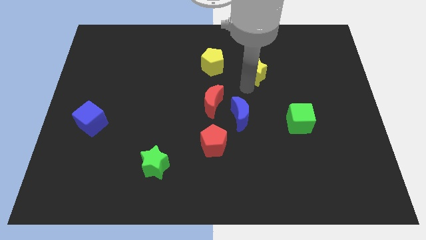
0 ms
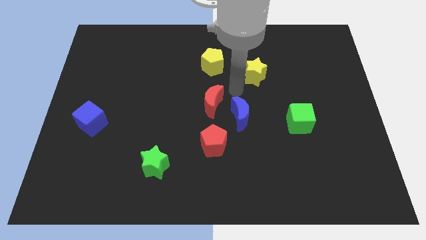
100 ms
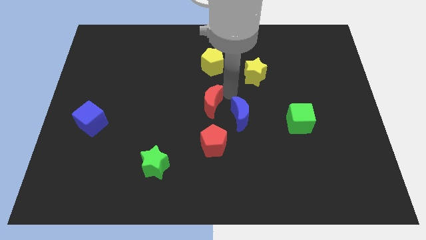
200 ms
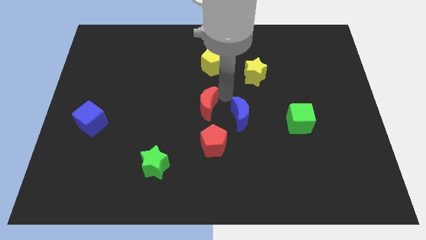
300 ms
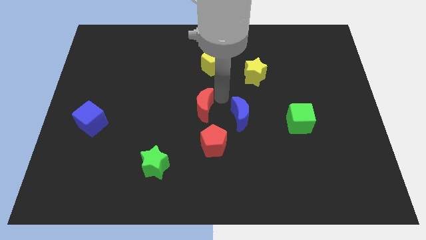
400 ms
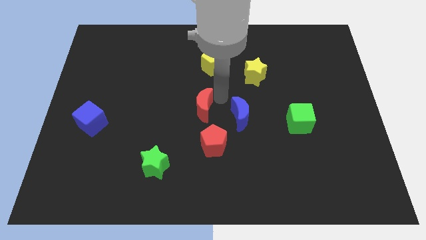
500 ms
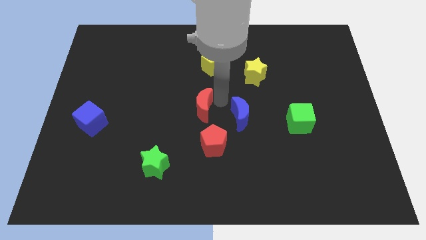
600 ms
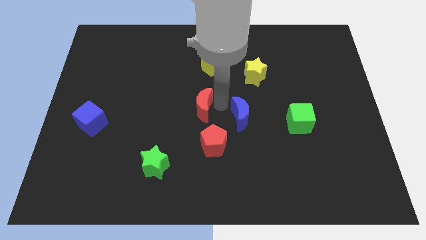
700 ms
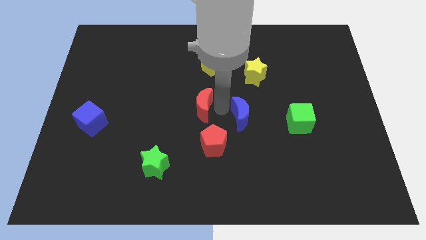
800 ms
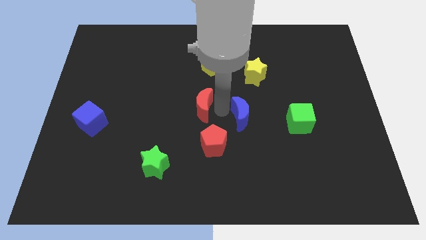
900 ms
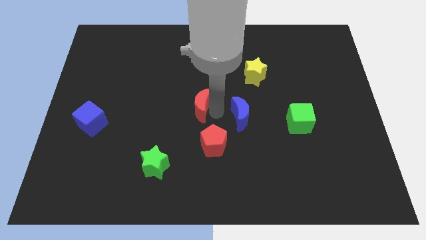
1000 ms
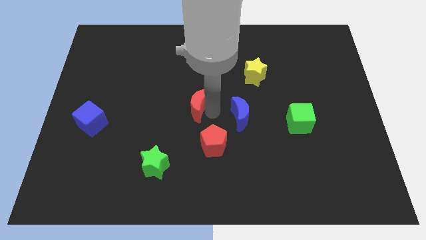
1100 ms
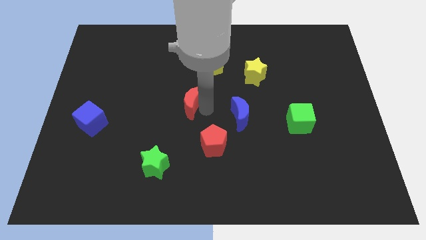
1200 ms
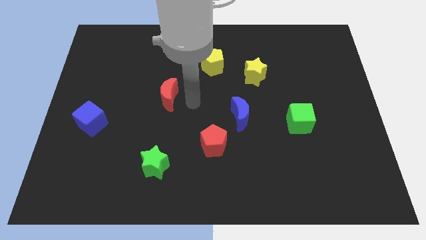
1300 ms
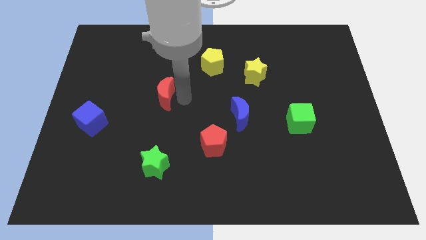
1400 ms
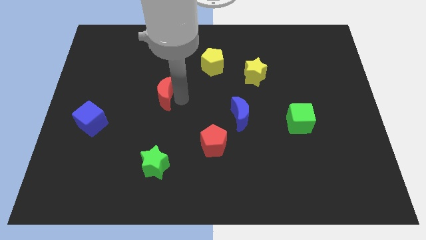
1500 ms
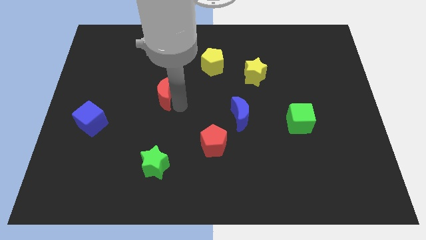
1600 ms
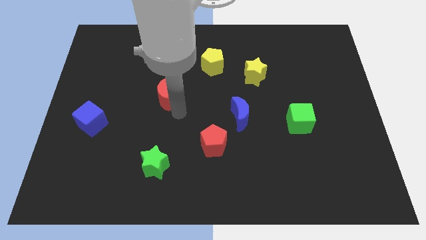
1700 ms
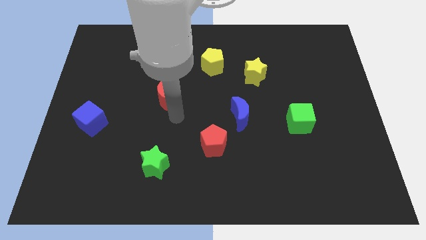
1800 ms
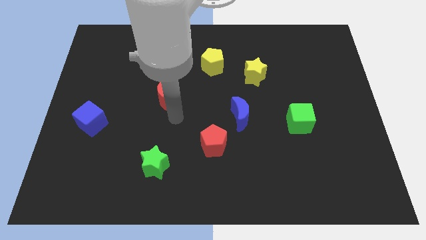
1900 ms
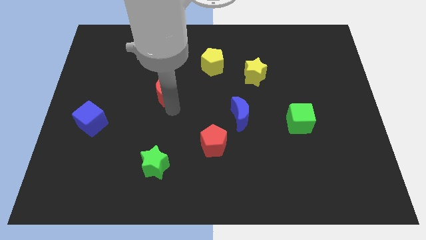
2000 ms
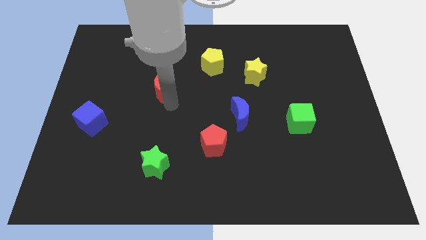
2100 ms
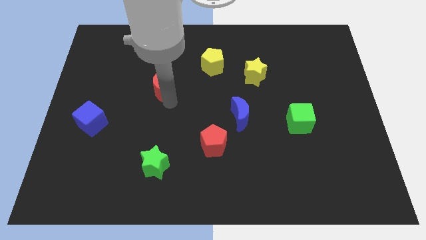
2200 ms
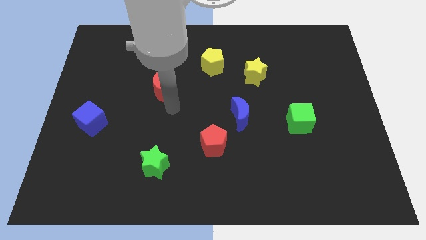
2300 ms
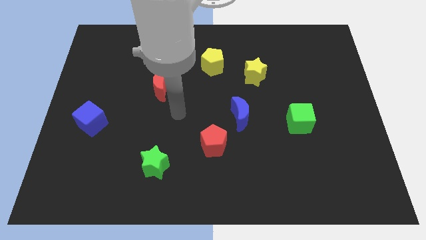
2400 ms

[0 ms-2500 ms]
move the red moon above the green star

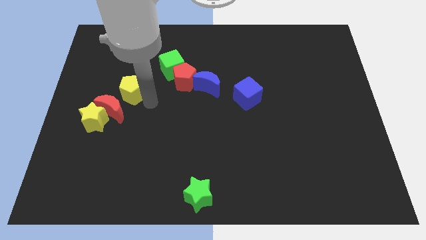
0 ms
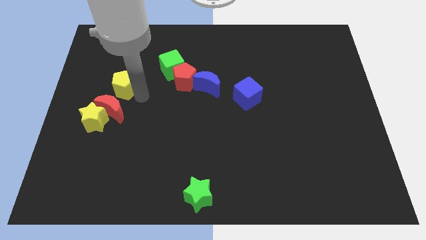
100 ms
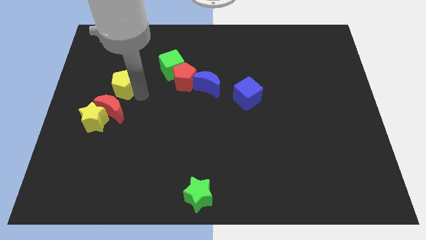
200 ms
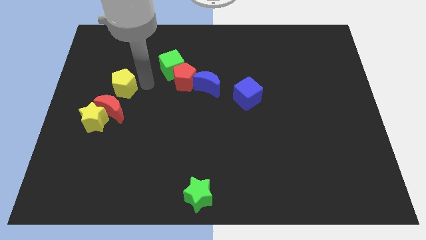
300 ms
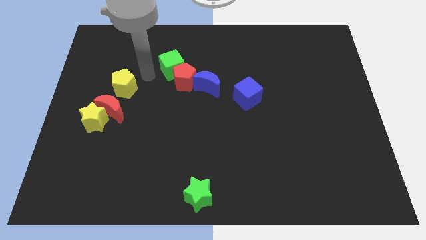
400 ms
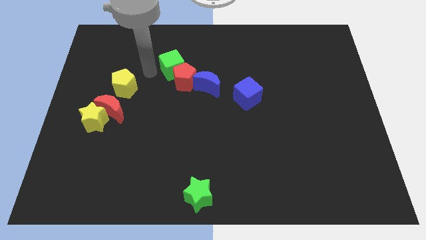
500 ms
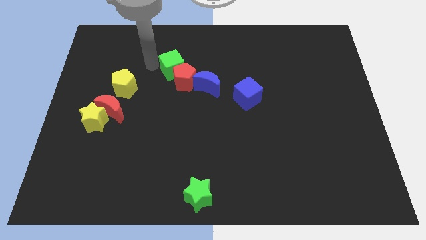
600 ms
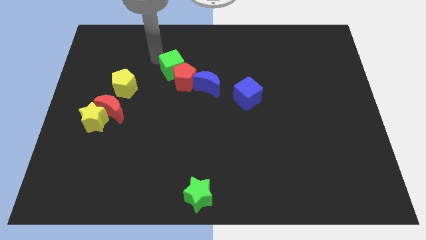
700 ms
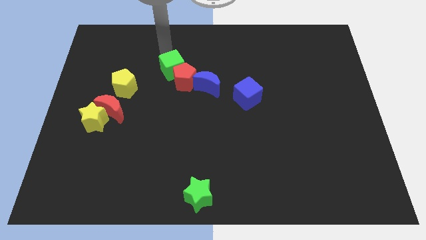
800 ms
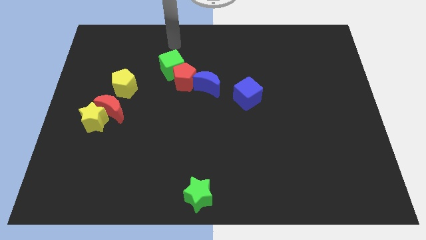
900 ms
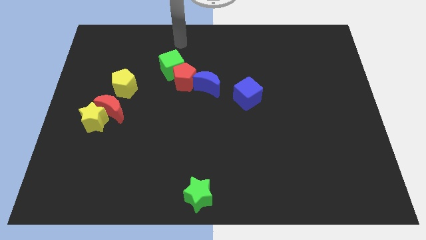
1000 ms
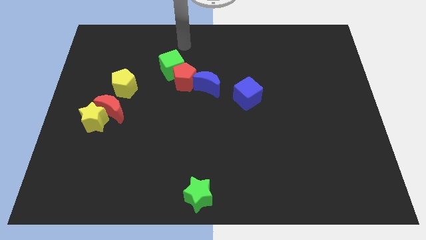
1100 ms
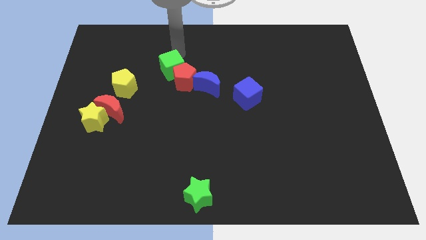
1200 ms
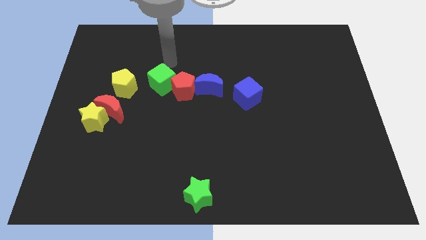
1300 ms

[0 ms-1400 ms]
place your arm to the top of the green cube

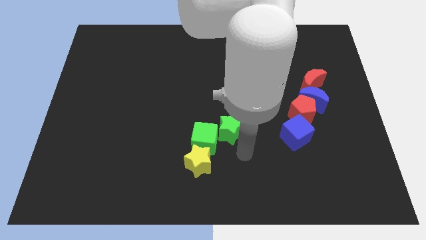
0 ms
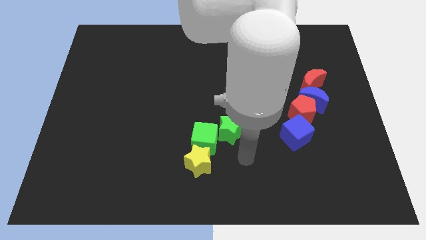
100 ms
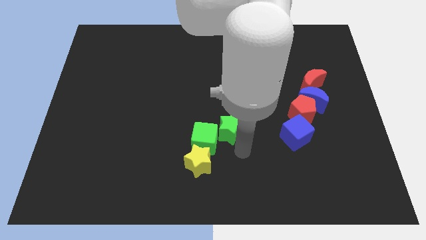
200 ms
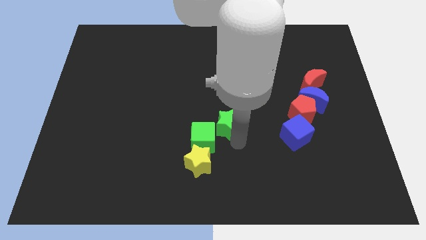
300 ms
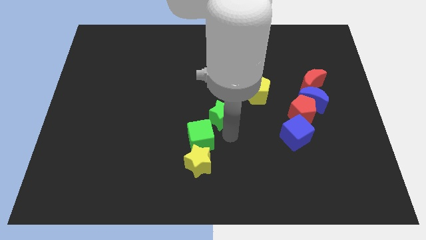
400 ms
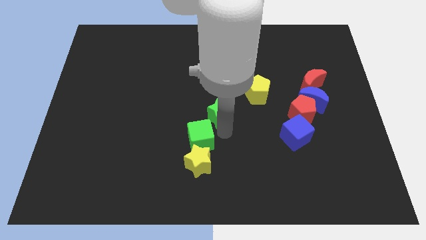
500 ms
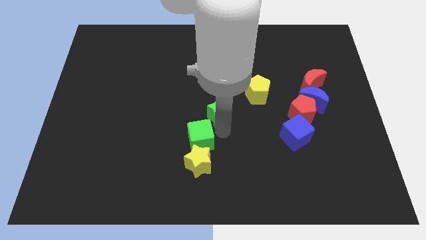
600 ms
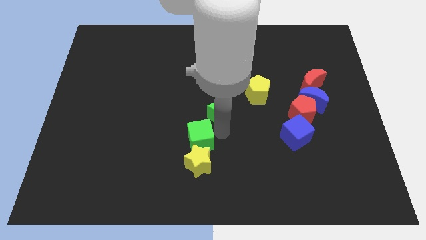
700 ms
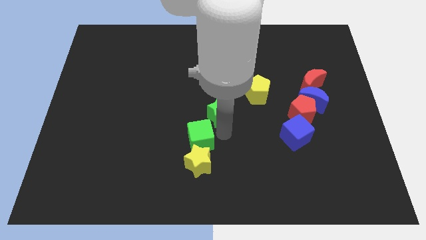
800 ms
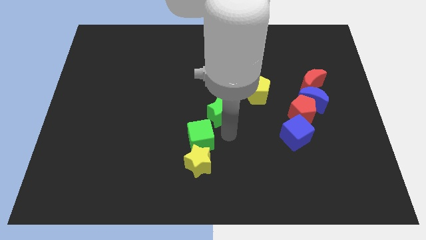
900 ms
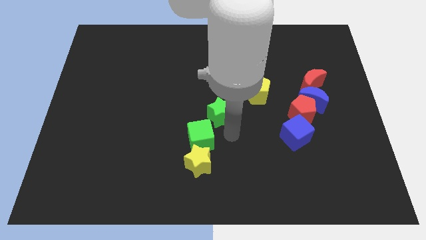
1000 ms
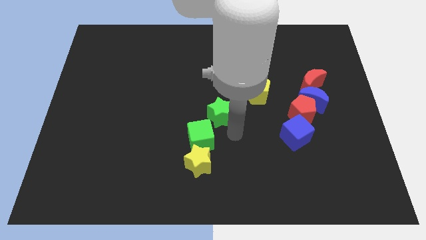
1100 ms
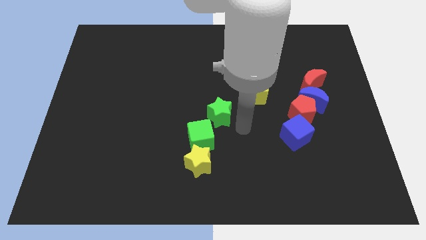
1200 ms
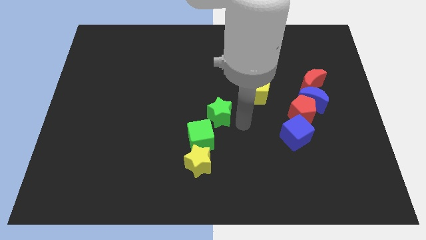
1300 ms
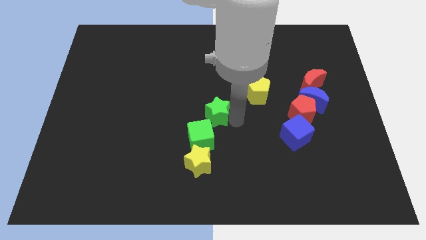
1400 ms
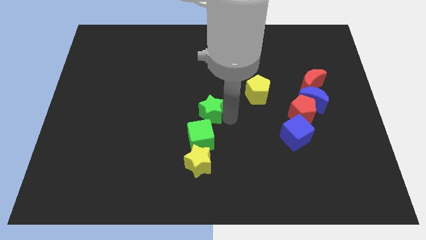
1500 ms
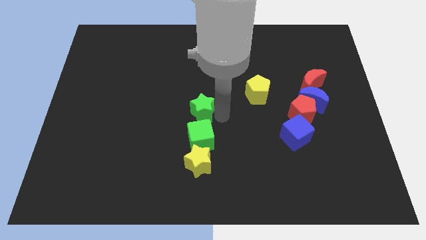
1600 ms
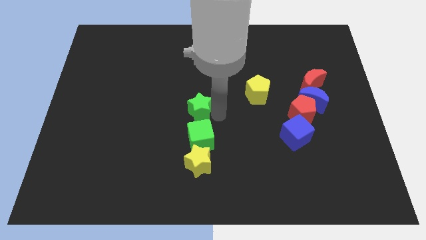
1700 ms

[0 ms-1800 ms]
place the green star vertically above the green cube

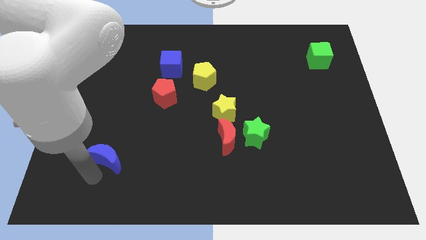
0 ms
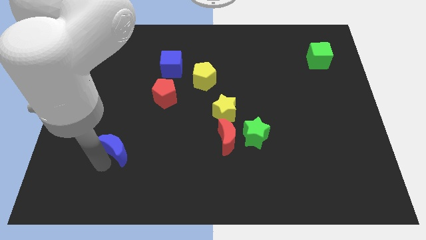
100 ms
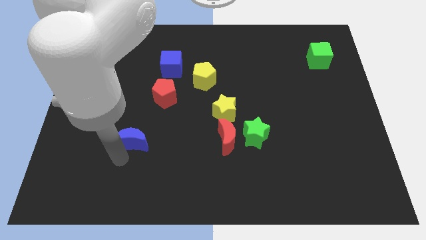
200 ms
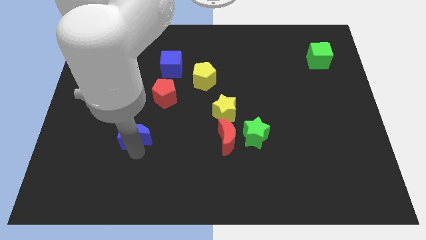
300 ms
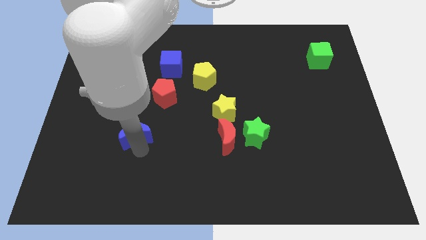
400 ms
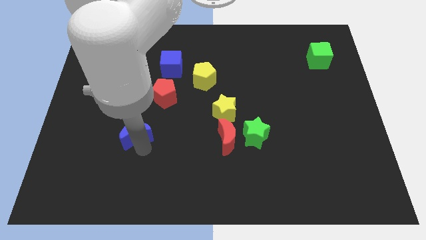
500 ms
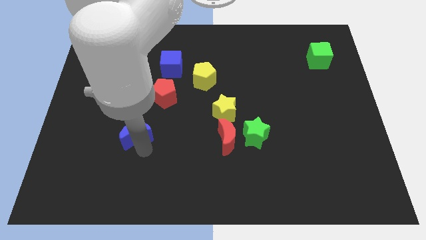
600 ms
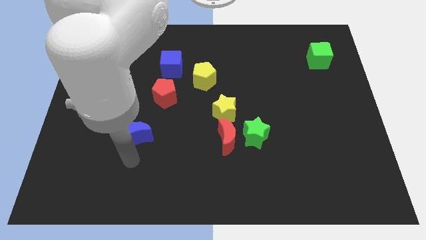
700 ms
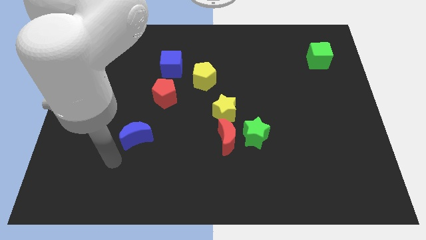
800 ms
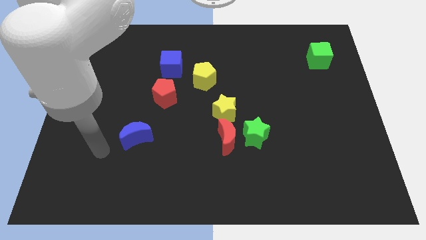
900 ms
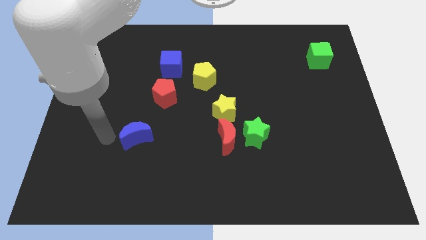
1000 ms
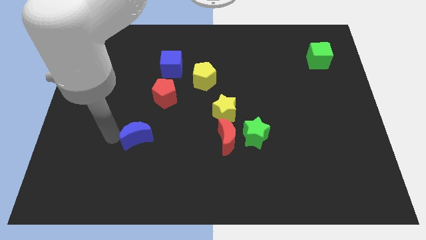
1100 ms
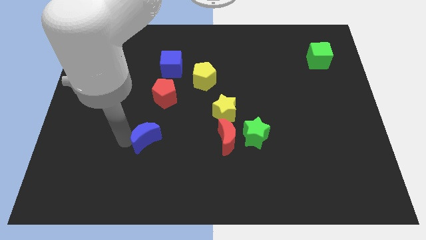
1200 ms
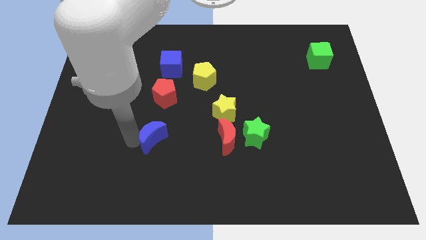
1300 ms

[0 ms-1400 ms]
place blue moon to the bottom of red pentagon

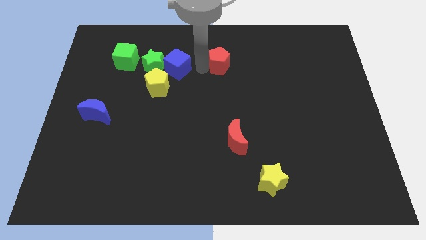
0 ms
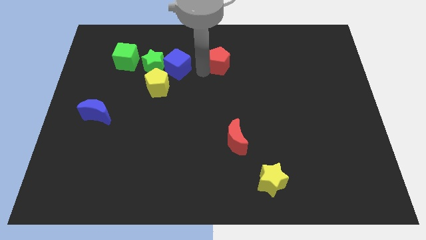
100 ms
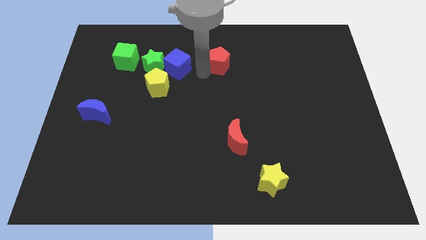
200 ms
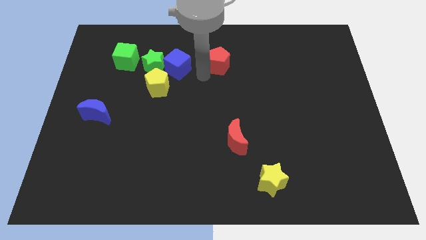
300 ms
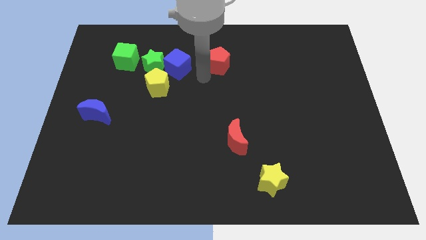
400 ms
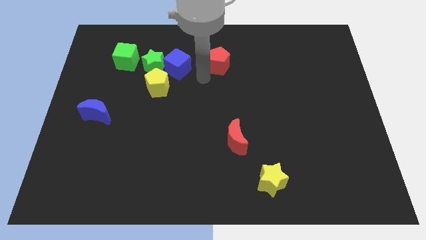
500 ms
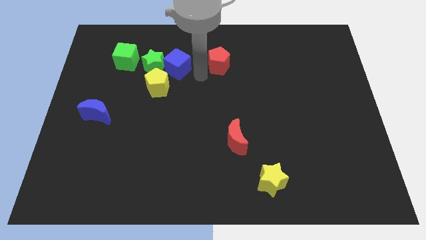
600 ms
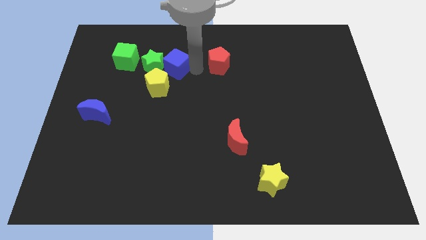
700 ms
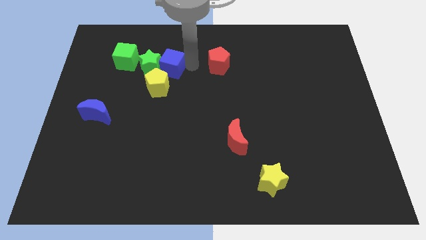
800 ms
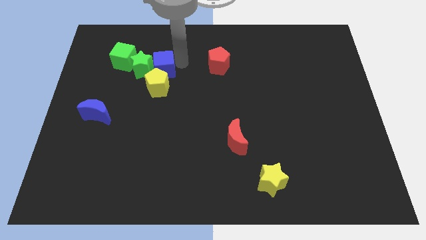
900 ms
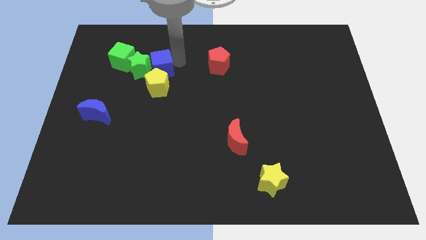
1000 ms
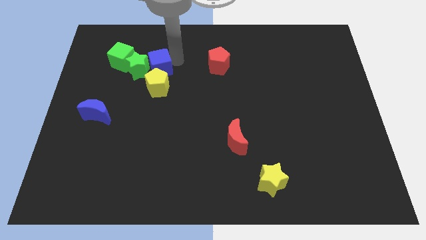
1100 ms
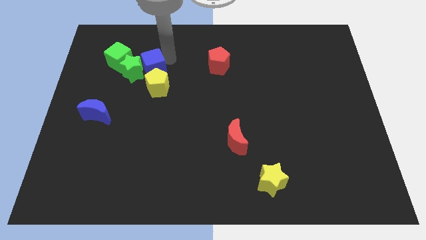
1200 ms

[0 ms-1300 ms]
place blue cube above yellow pentagon

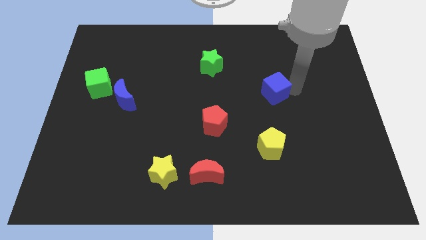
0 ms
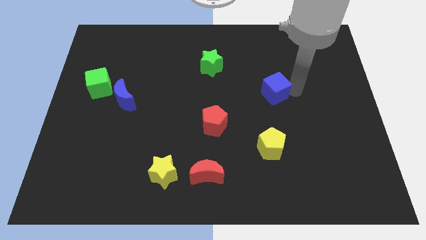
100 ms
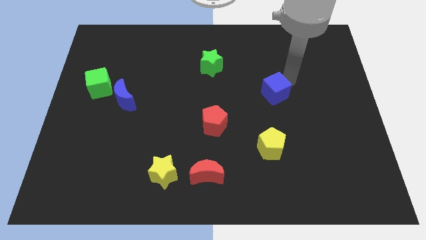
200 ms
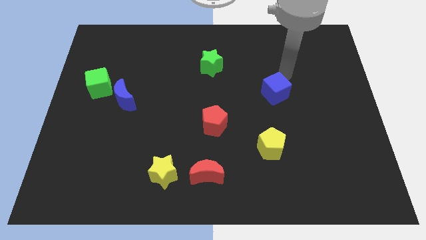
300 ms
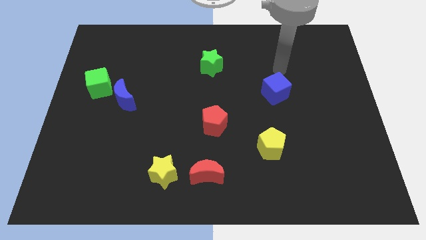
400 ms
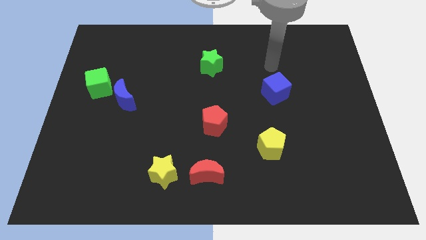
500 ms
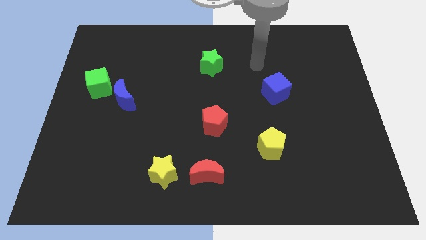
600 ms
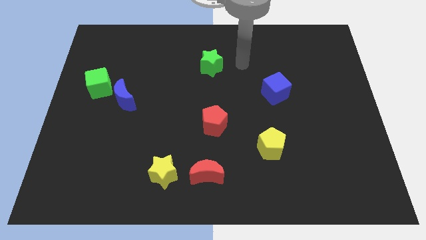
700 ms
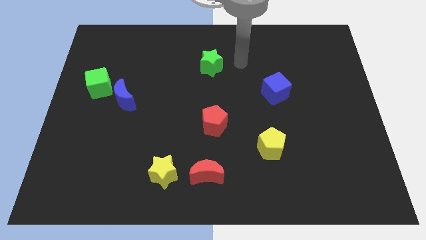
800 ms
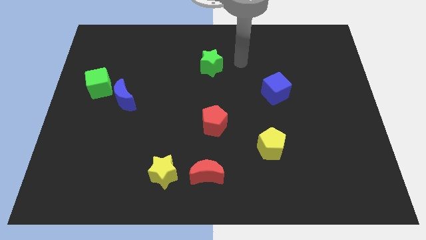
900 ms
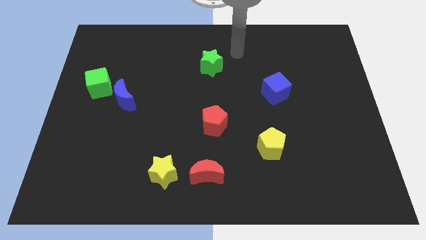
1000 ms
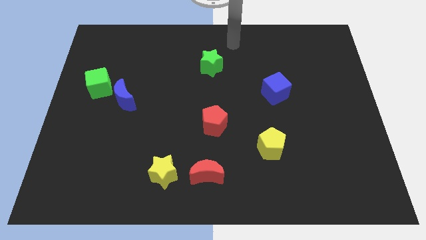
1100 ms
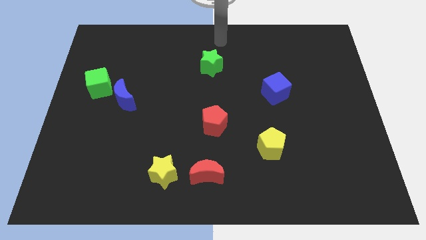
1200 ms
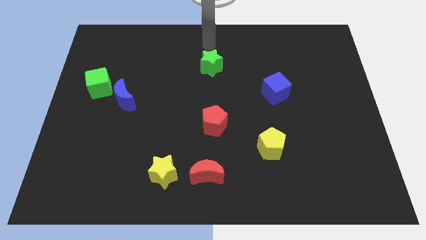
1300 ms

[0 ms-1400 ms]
place your hand above the green star
